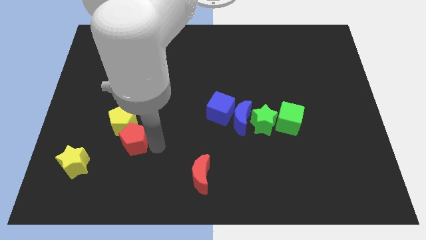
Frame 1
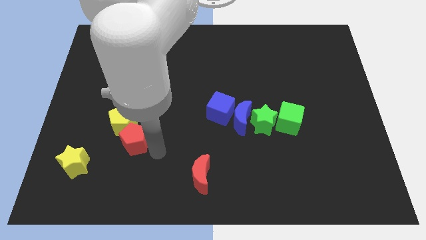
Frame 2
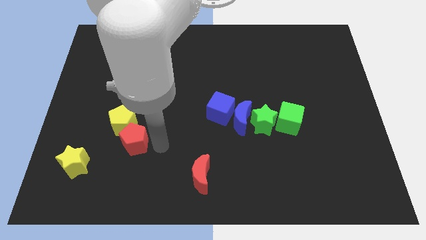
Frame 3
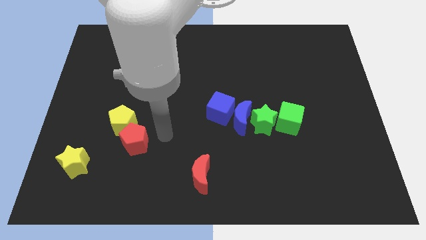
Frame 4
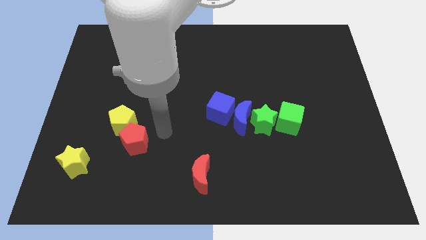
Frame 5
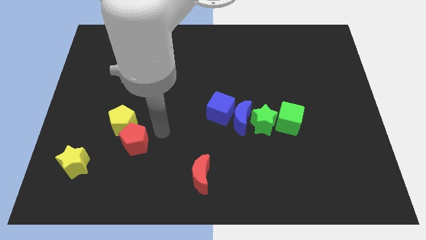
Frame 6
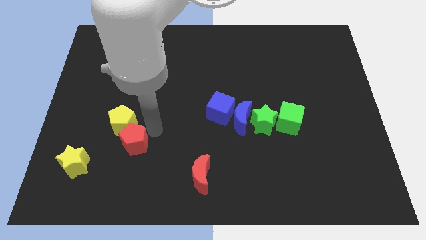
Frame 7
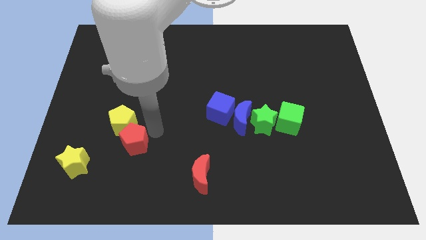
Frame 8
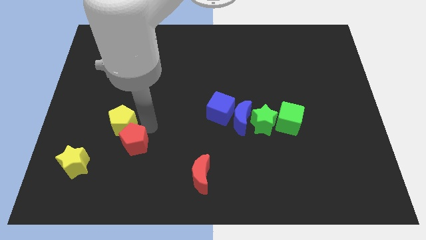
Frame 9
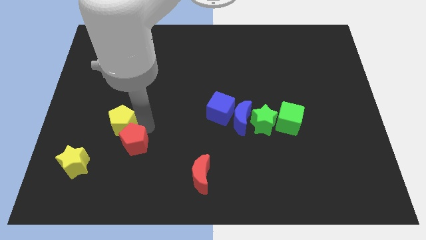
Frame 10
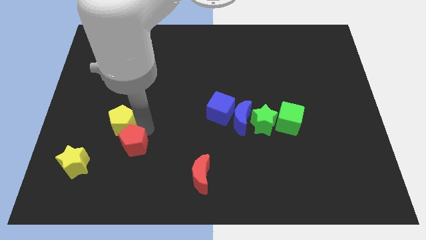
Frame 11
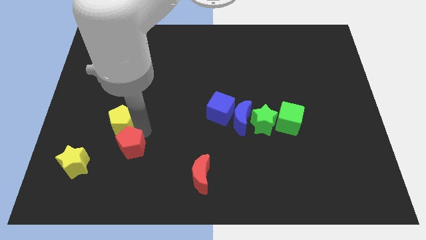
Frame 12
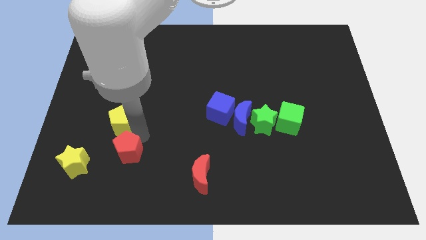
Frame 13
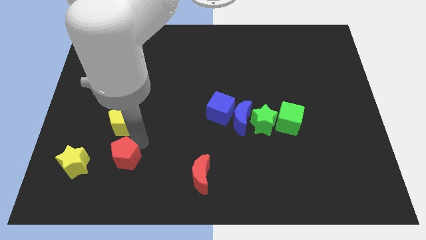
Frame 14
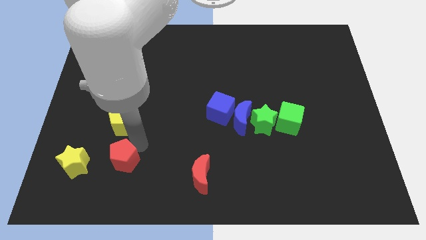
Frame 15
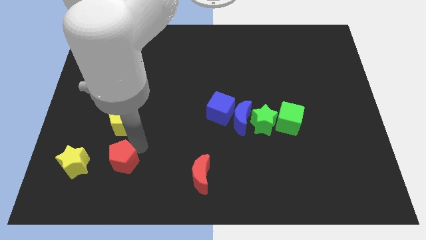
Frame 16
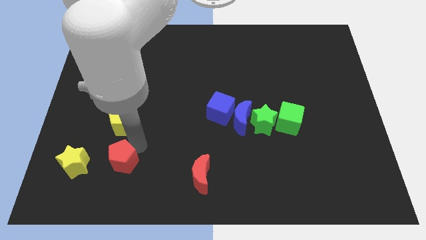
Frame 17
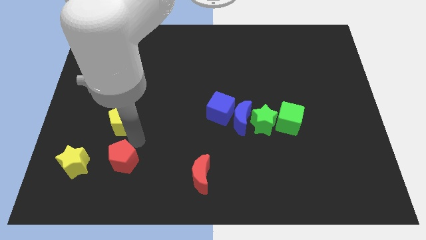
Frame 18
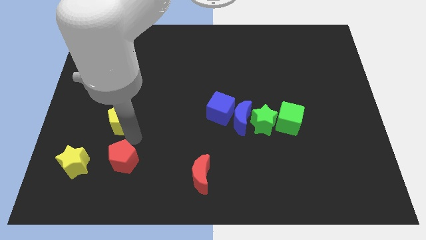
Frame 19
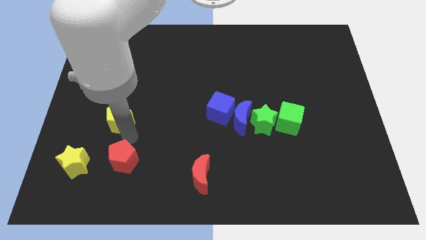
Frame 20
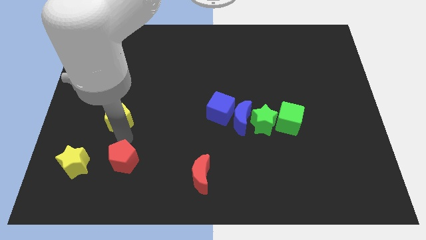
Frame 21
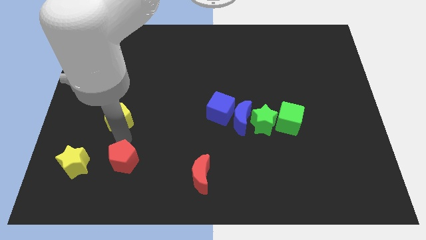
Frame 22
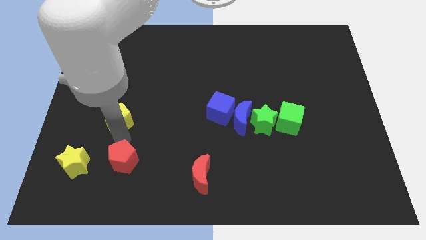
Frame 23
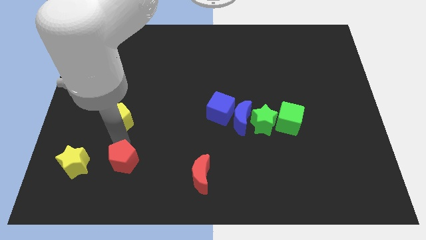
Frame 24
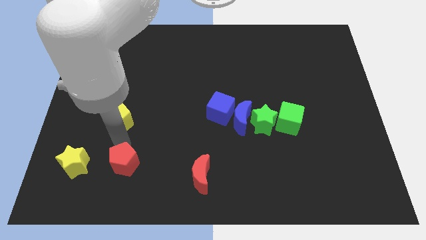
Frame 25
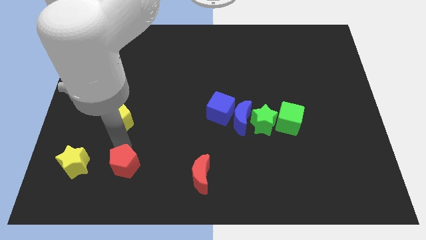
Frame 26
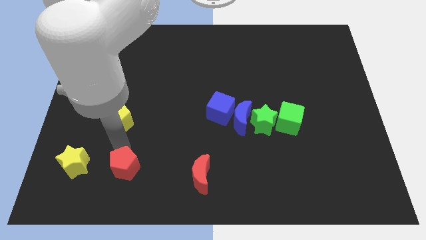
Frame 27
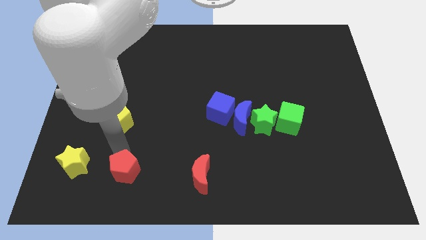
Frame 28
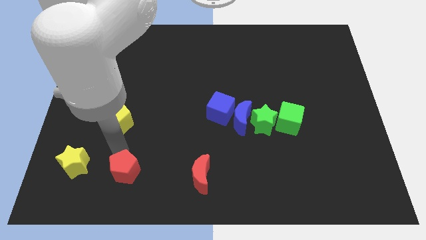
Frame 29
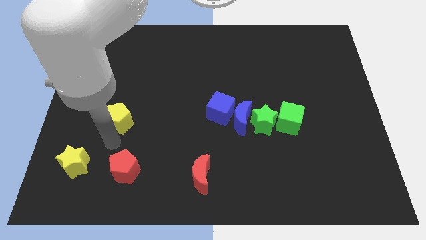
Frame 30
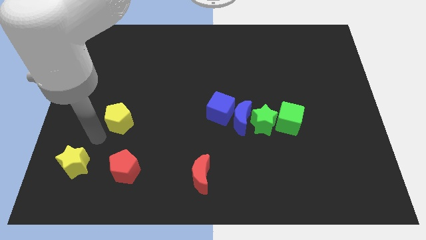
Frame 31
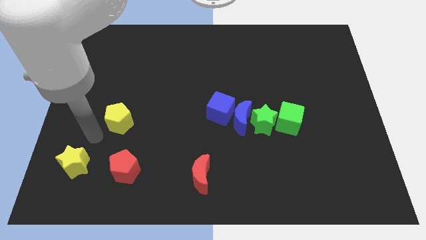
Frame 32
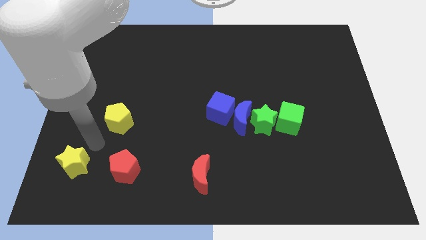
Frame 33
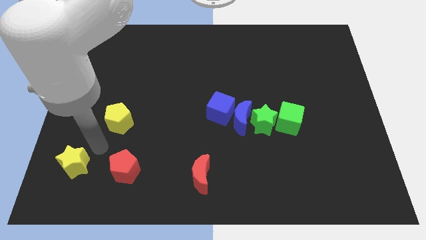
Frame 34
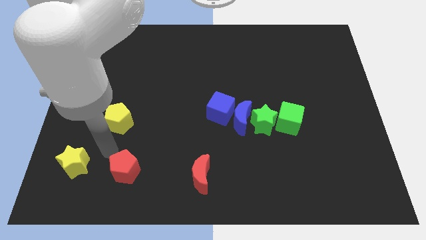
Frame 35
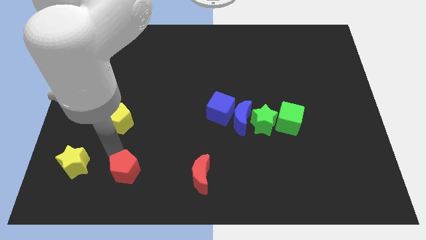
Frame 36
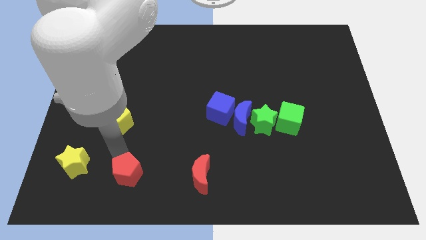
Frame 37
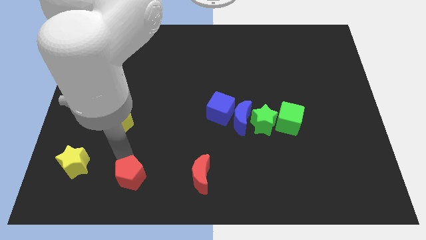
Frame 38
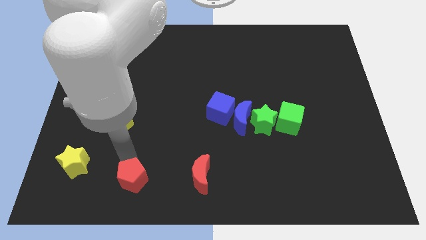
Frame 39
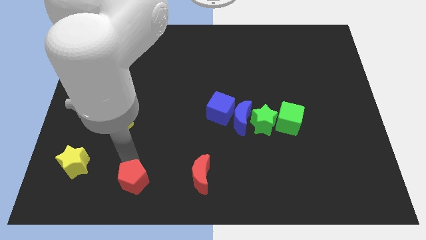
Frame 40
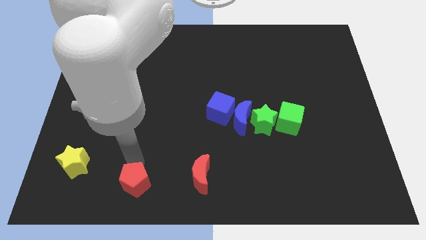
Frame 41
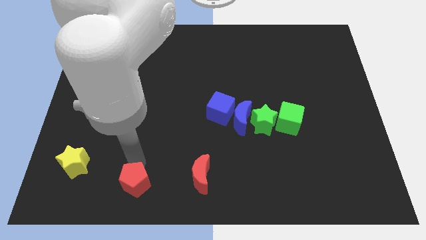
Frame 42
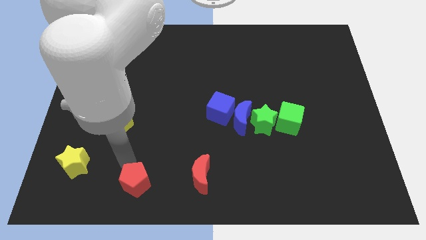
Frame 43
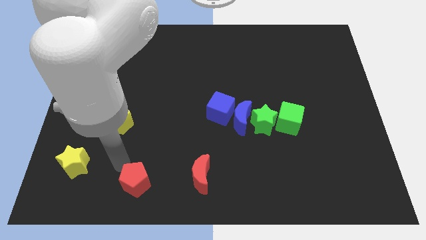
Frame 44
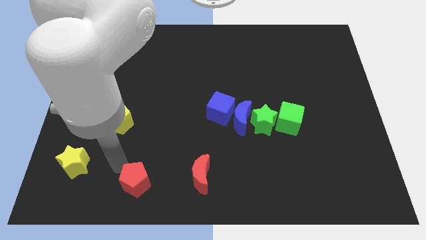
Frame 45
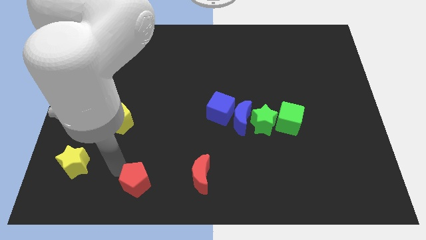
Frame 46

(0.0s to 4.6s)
separate the red pentagon from the yellow pentagon

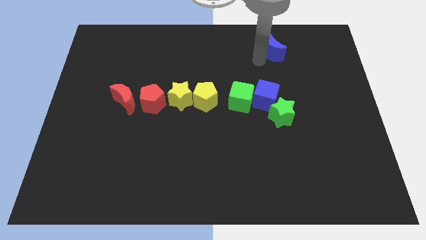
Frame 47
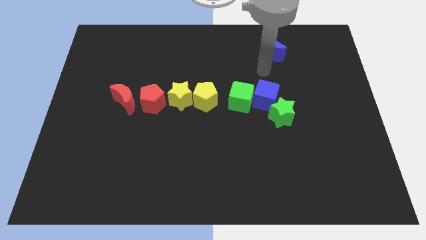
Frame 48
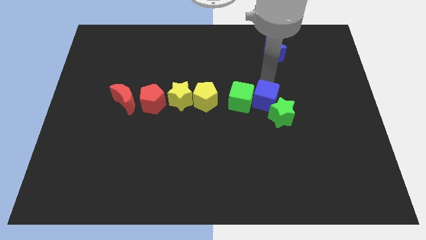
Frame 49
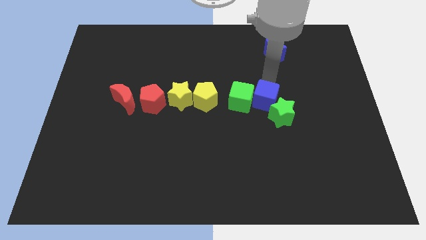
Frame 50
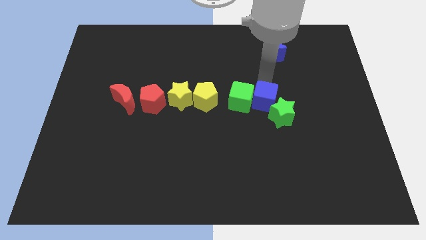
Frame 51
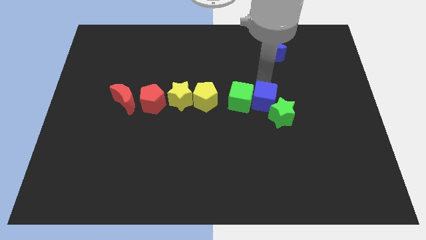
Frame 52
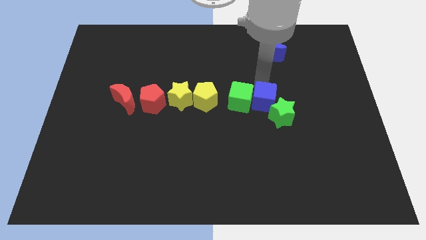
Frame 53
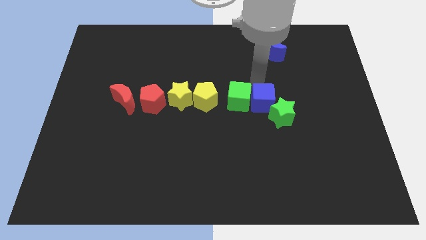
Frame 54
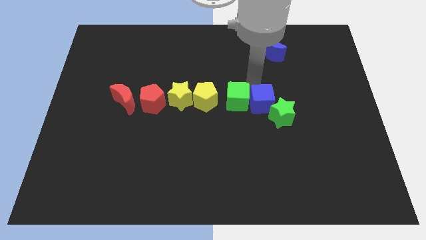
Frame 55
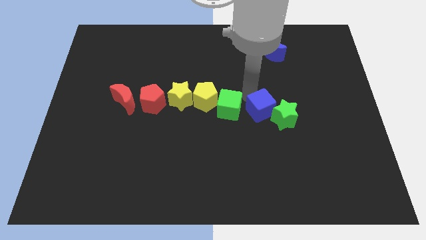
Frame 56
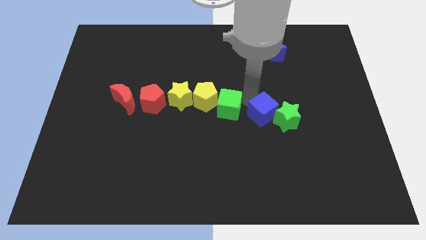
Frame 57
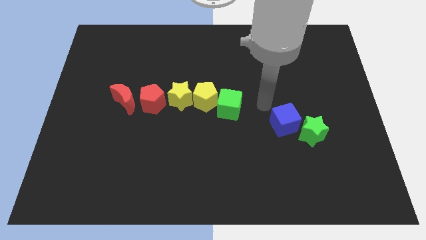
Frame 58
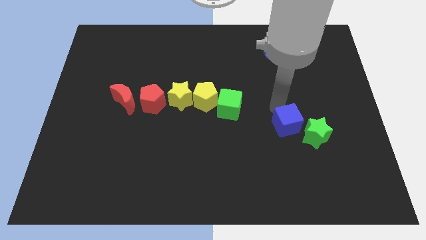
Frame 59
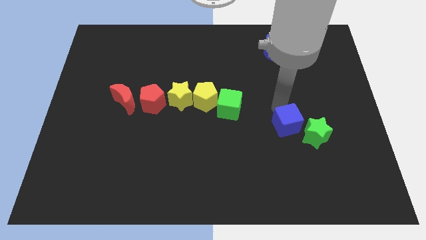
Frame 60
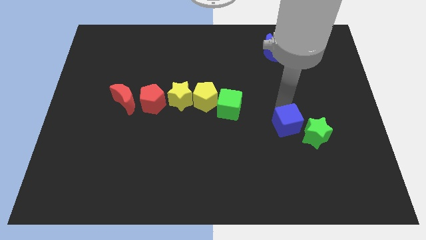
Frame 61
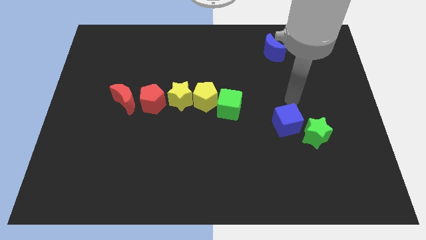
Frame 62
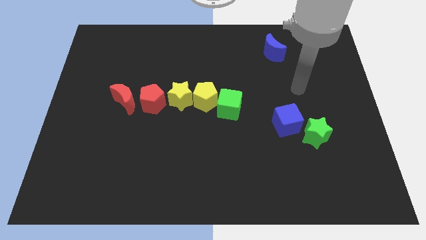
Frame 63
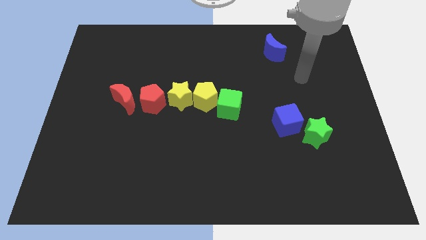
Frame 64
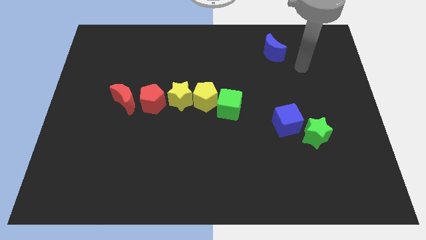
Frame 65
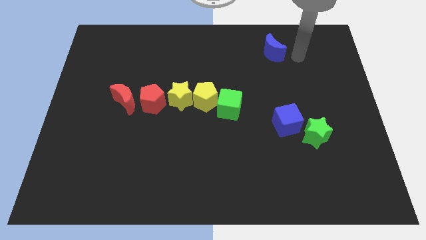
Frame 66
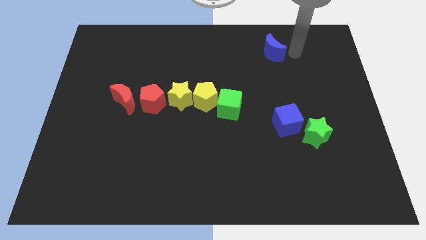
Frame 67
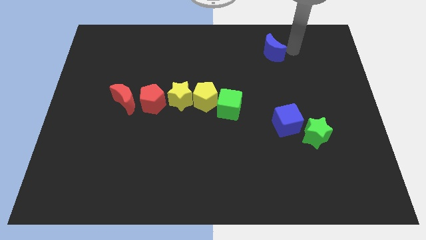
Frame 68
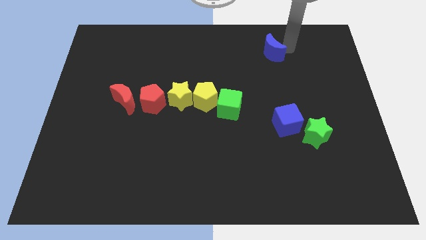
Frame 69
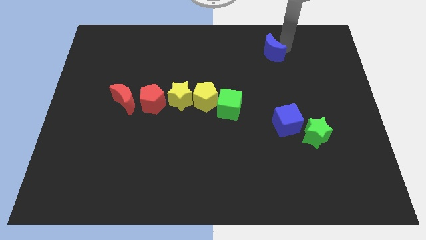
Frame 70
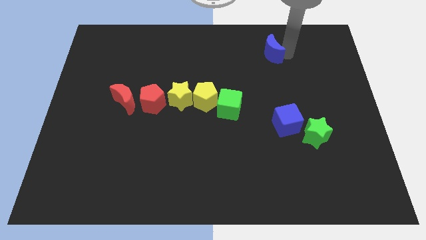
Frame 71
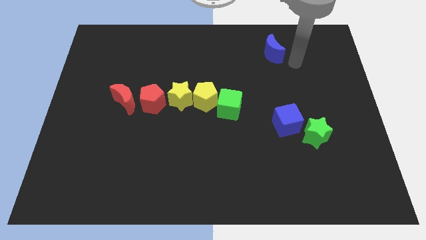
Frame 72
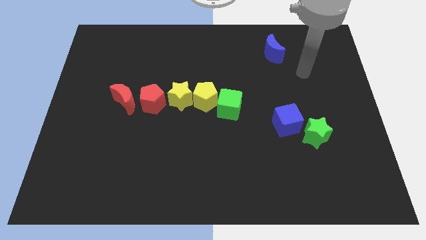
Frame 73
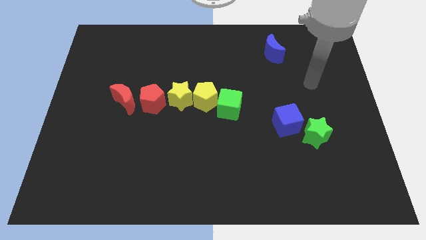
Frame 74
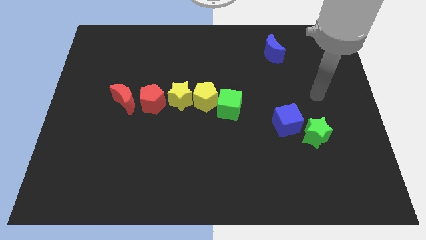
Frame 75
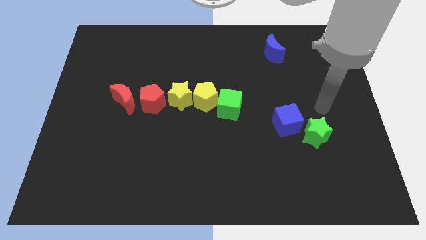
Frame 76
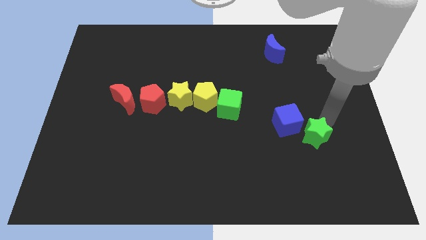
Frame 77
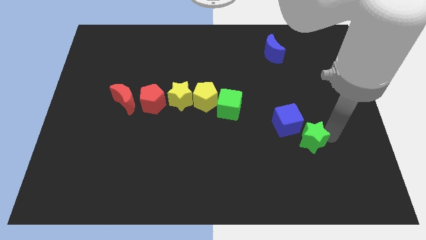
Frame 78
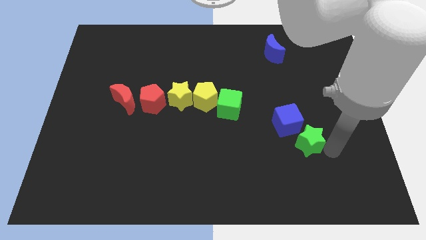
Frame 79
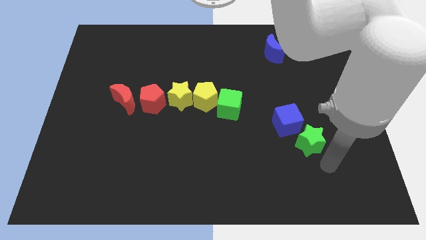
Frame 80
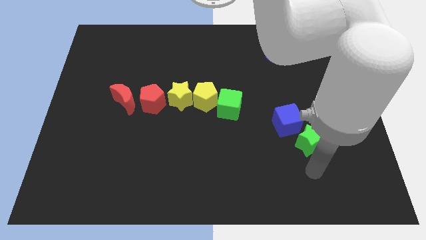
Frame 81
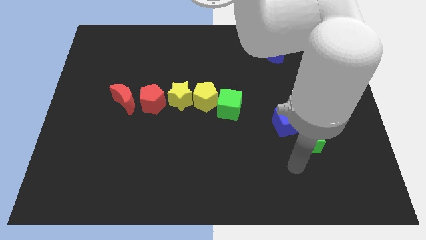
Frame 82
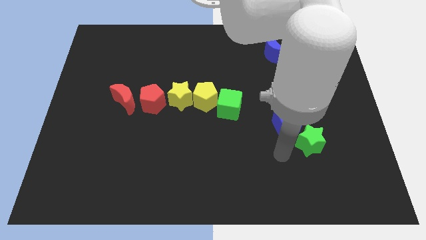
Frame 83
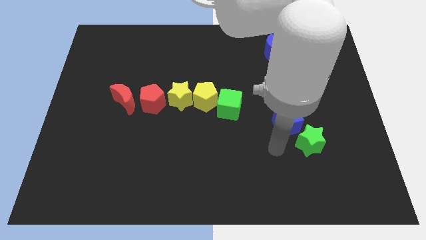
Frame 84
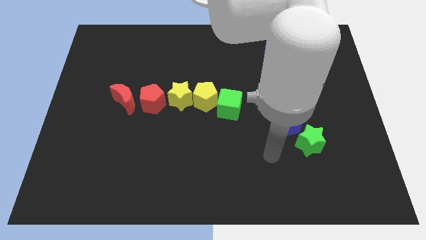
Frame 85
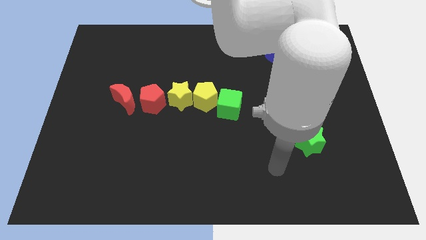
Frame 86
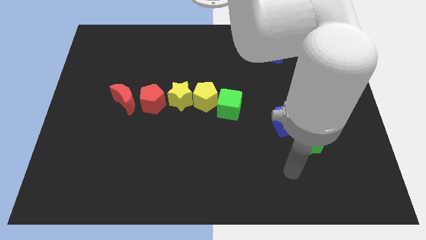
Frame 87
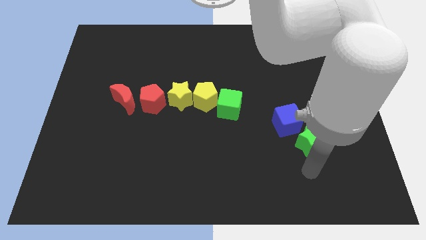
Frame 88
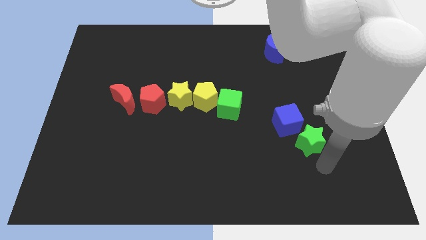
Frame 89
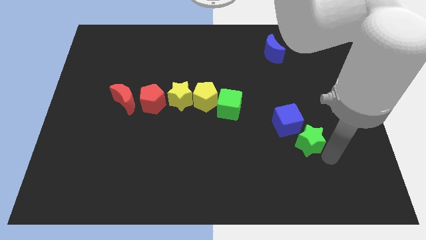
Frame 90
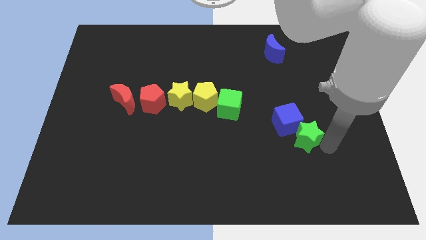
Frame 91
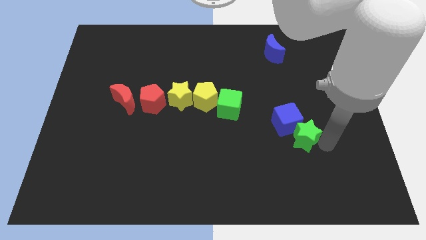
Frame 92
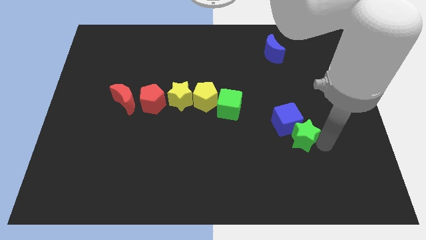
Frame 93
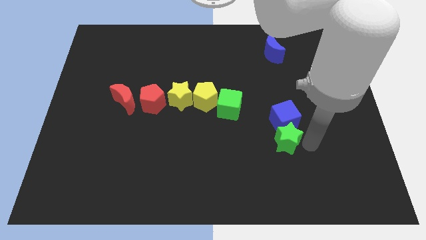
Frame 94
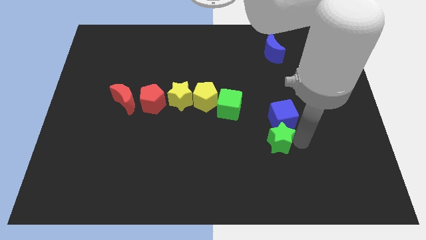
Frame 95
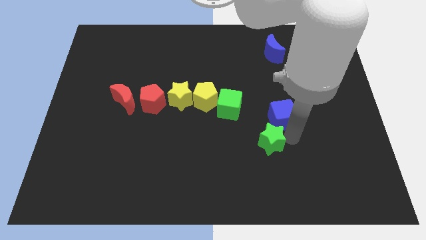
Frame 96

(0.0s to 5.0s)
place the green star below the blue cube
